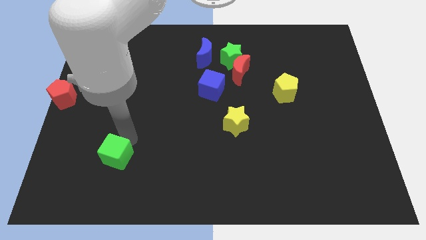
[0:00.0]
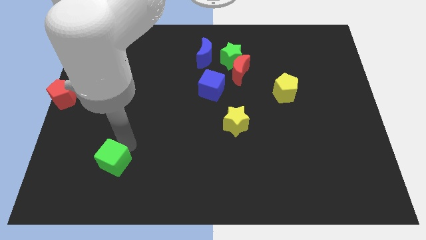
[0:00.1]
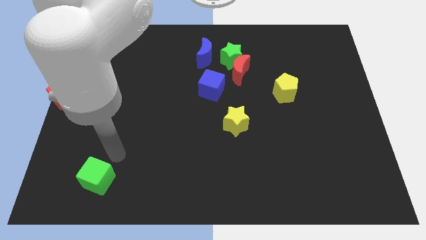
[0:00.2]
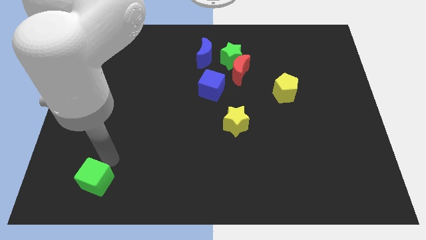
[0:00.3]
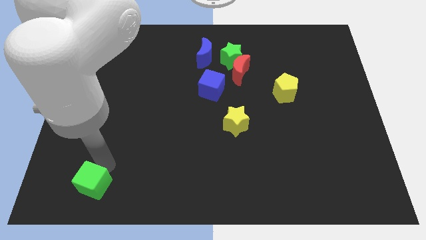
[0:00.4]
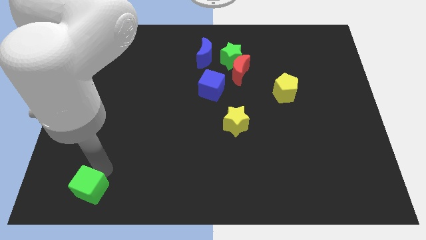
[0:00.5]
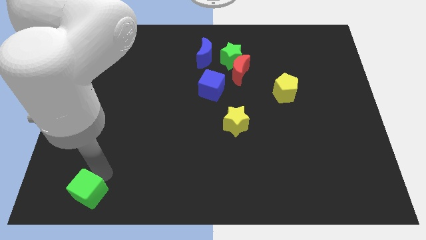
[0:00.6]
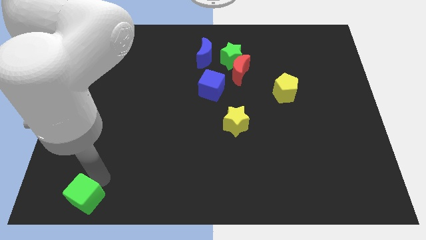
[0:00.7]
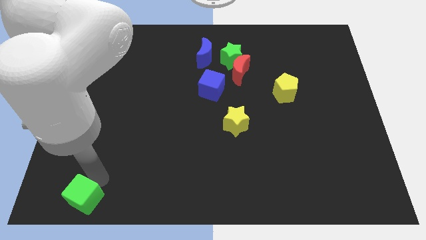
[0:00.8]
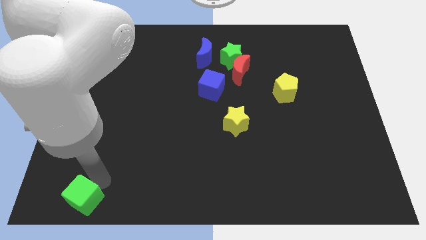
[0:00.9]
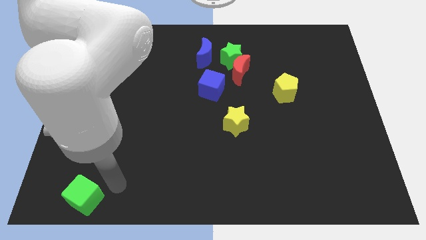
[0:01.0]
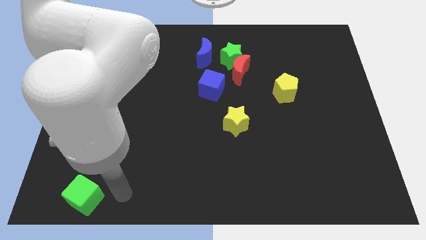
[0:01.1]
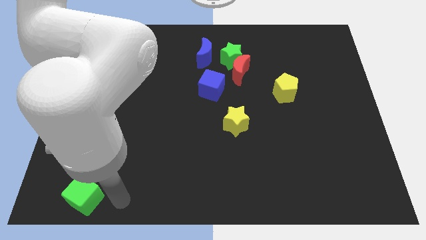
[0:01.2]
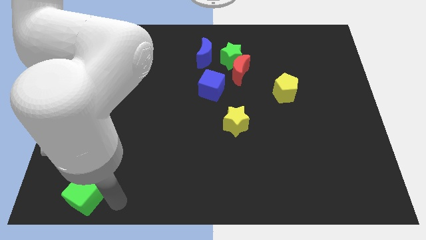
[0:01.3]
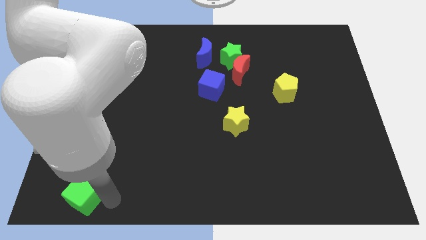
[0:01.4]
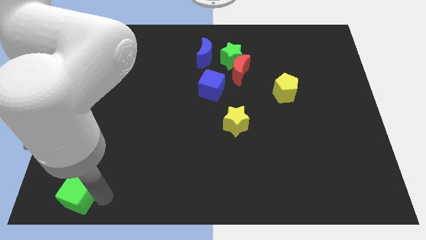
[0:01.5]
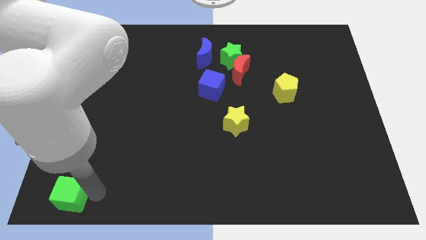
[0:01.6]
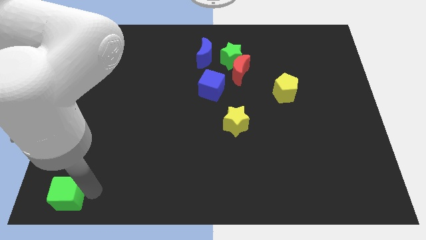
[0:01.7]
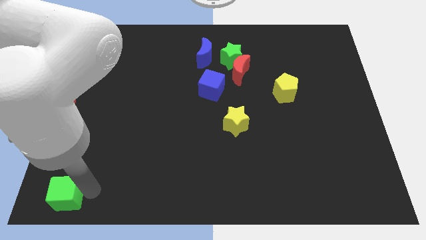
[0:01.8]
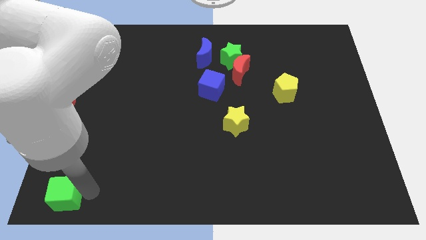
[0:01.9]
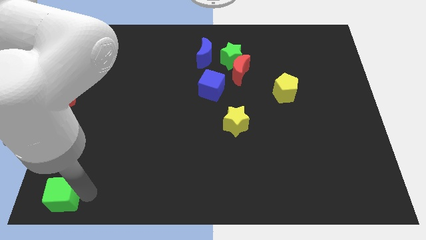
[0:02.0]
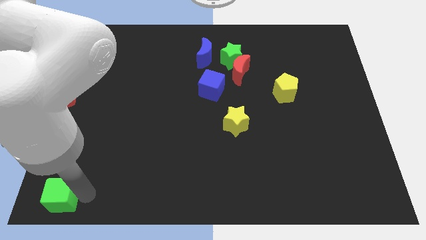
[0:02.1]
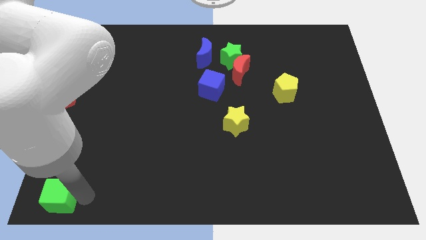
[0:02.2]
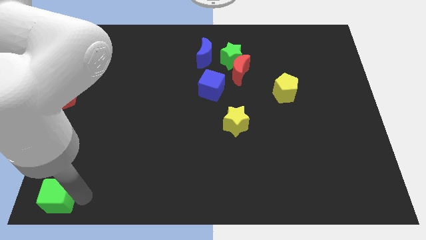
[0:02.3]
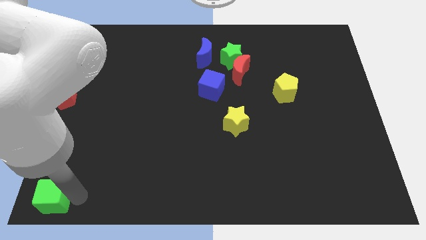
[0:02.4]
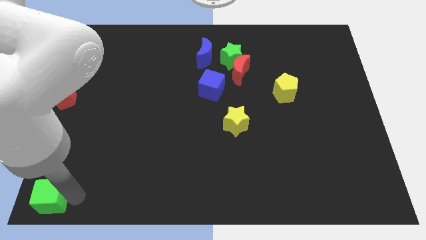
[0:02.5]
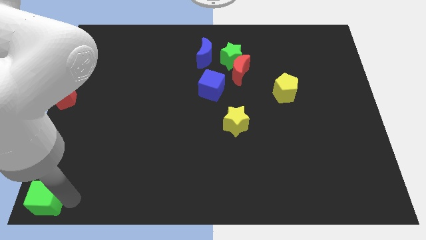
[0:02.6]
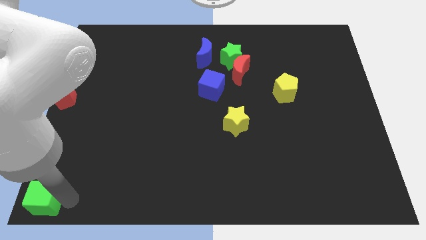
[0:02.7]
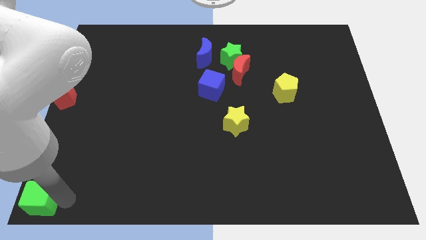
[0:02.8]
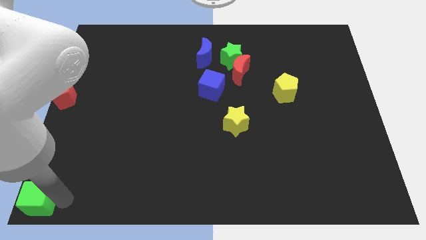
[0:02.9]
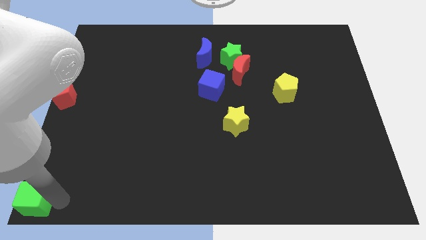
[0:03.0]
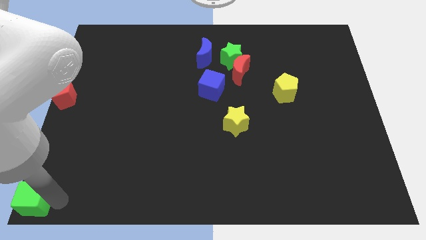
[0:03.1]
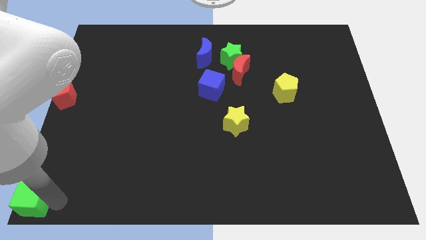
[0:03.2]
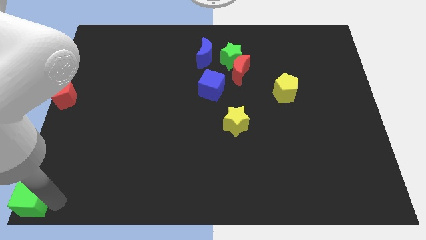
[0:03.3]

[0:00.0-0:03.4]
place the green cube at the bottom left corner of the board

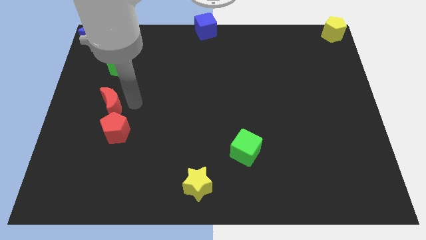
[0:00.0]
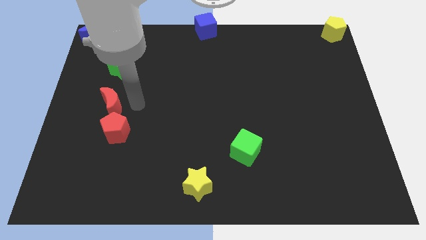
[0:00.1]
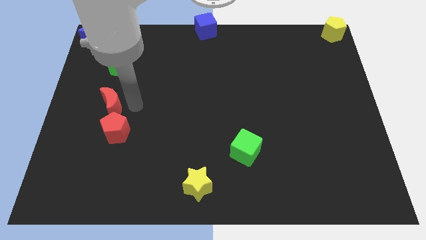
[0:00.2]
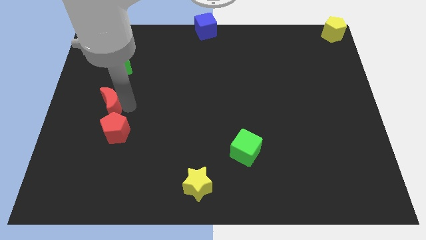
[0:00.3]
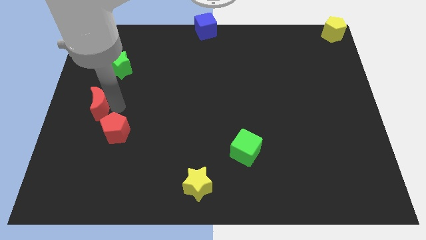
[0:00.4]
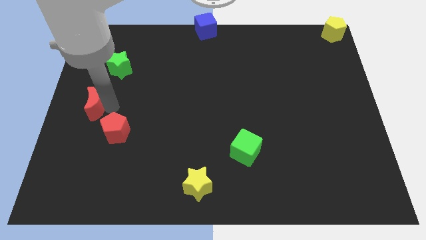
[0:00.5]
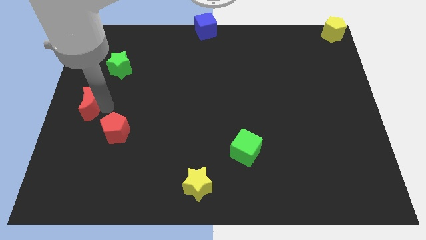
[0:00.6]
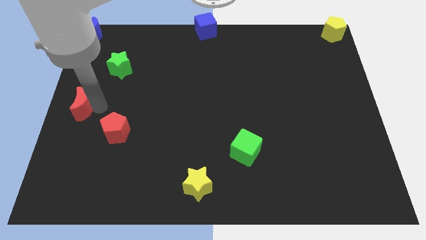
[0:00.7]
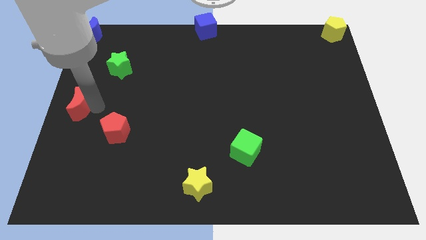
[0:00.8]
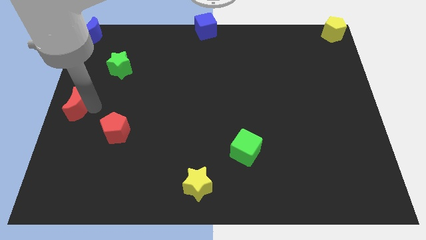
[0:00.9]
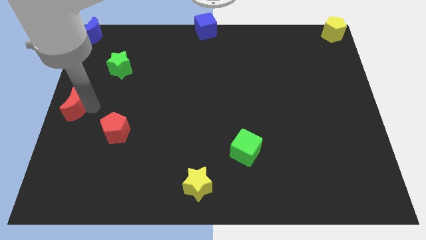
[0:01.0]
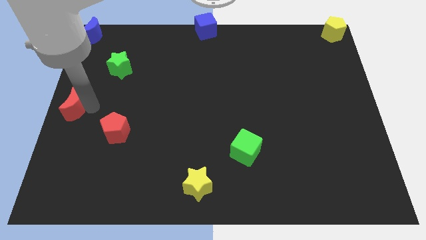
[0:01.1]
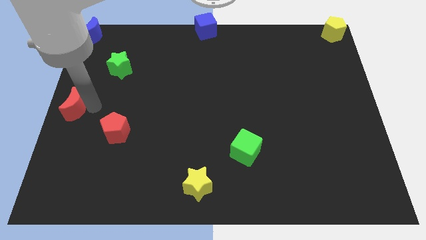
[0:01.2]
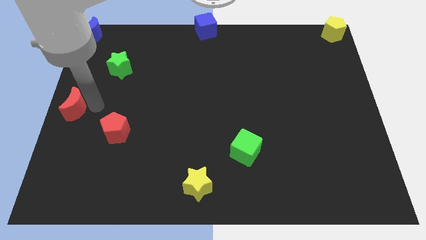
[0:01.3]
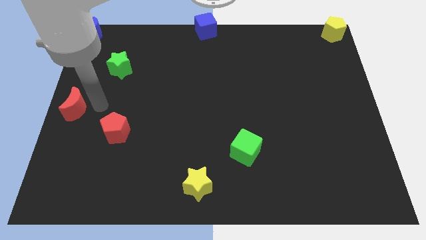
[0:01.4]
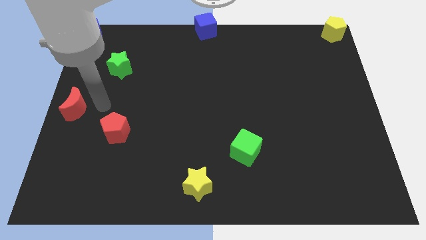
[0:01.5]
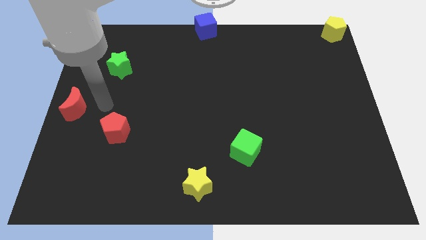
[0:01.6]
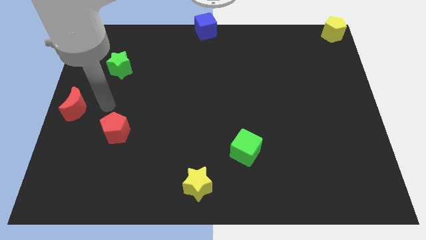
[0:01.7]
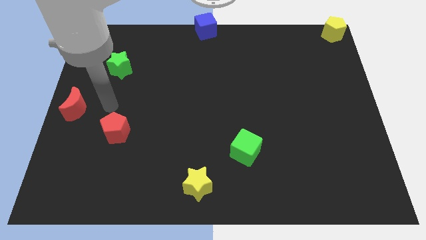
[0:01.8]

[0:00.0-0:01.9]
place the red crescent to the left center of the board

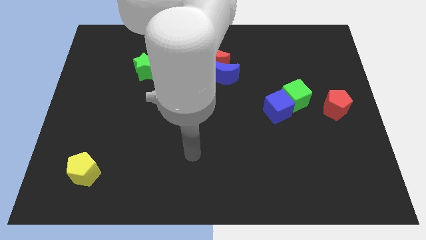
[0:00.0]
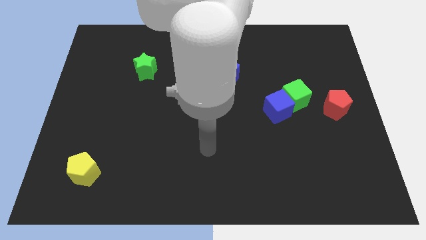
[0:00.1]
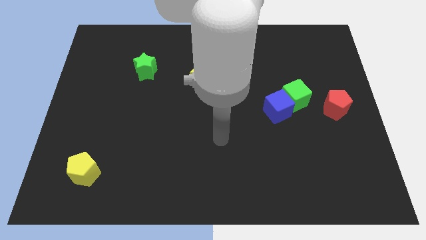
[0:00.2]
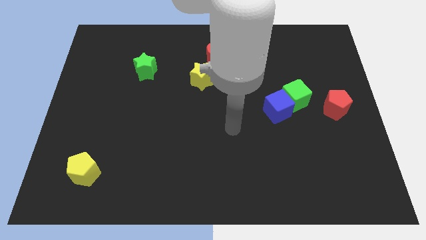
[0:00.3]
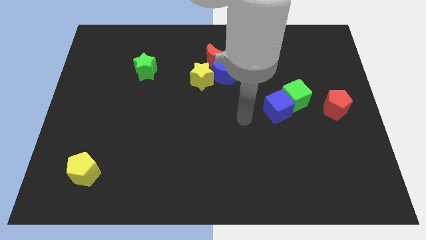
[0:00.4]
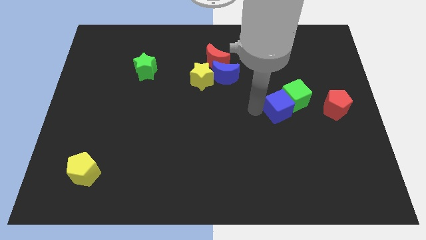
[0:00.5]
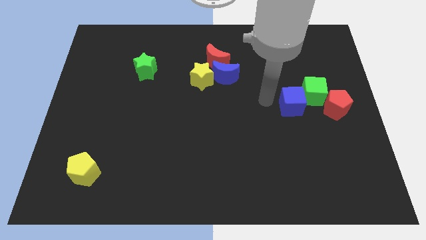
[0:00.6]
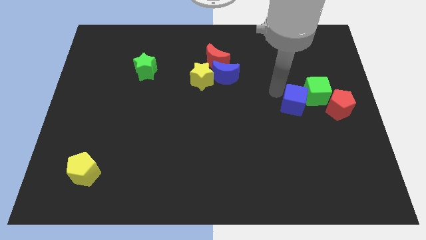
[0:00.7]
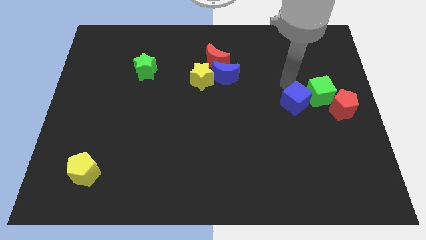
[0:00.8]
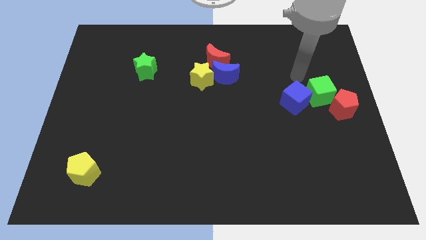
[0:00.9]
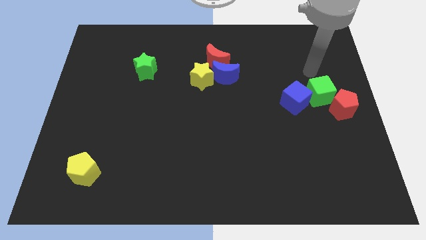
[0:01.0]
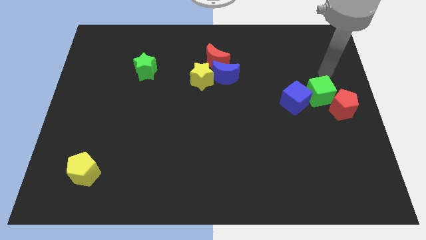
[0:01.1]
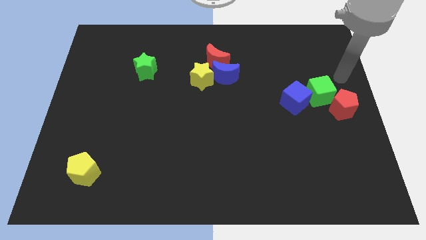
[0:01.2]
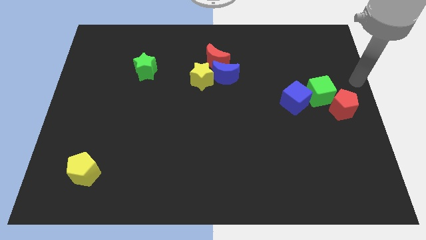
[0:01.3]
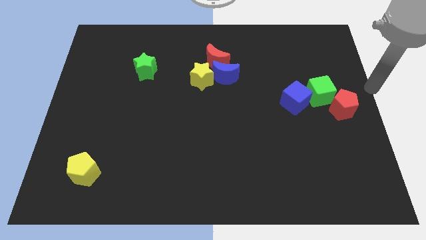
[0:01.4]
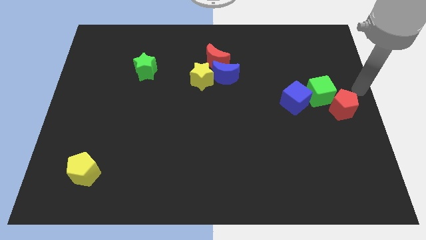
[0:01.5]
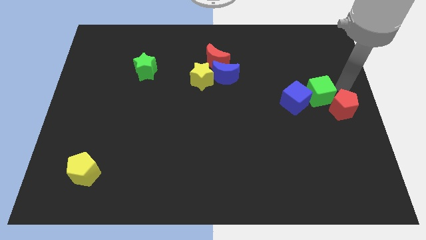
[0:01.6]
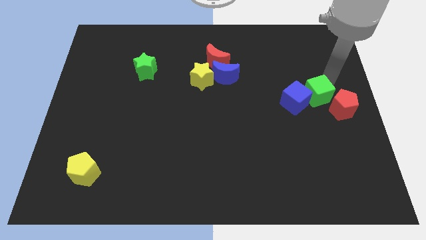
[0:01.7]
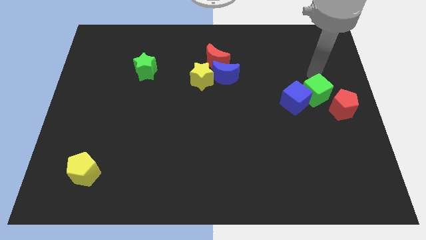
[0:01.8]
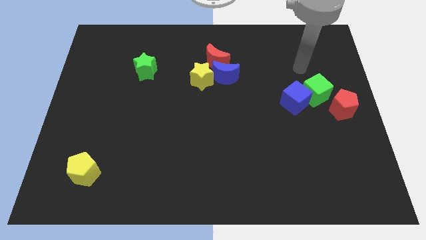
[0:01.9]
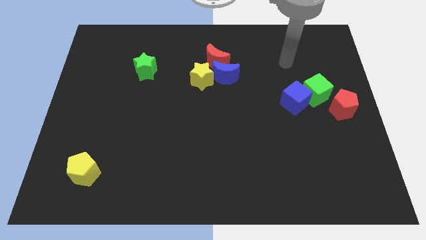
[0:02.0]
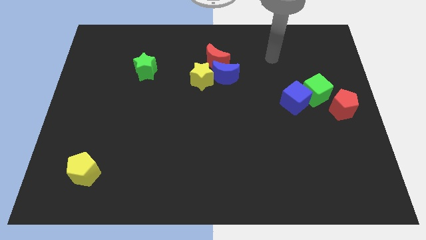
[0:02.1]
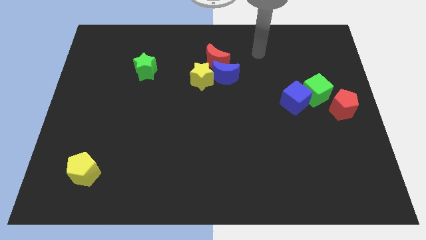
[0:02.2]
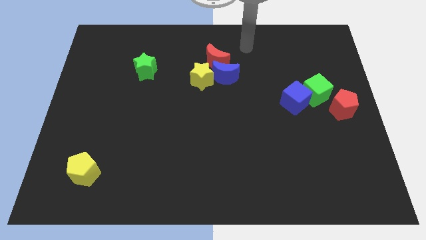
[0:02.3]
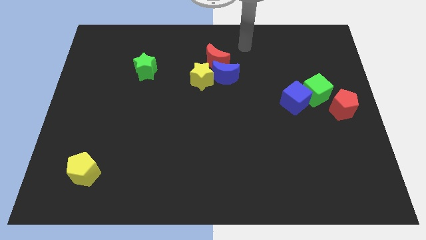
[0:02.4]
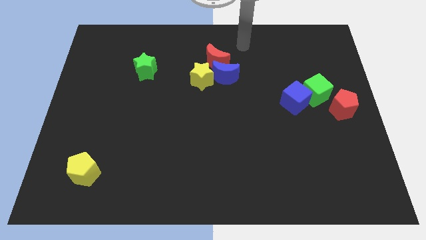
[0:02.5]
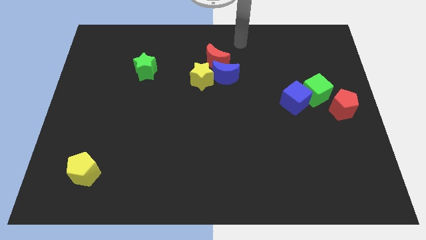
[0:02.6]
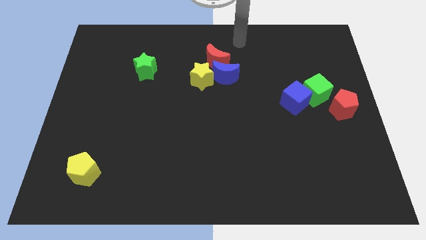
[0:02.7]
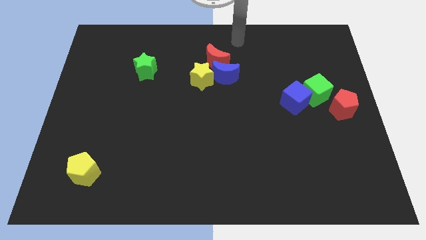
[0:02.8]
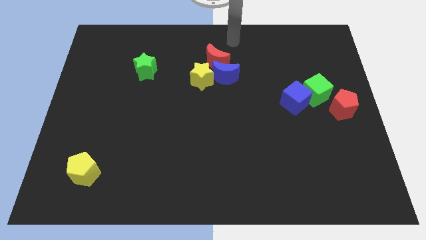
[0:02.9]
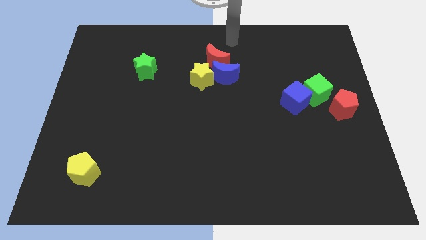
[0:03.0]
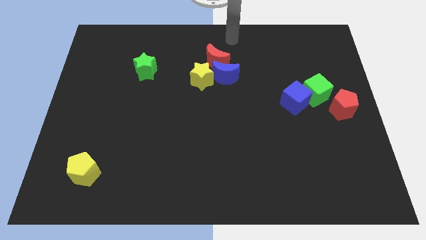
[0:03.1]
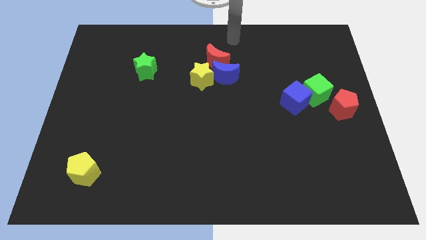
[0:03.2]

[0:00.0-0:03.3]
move the red pentagonblue and the green cube towards the center right

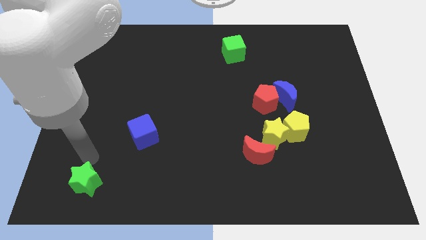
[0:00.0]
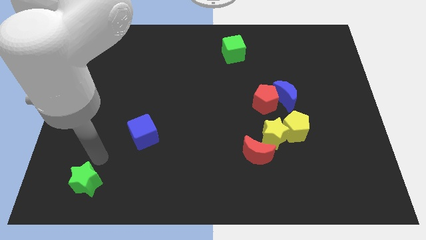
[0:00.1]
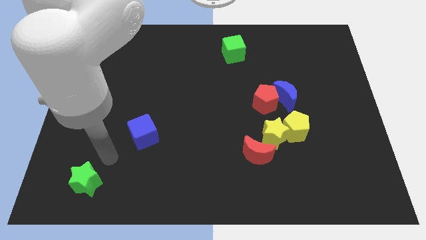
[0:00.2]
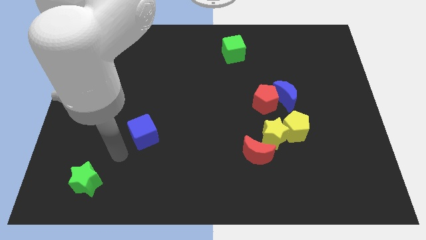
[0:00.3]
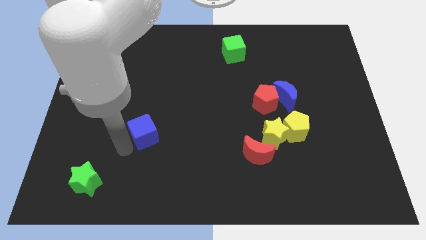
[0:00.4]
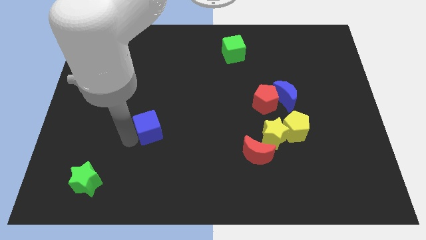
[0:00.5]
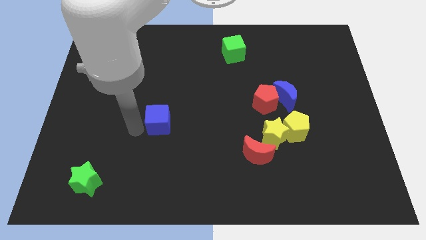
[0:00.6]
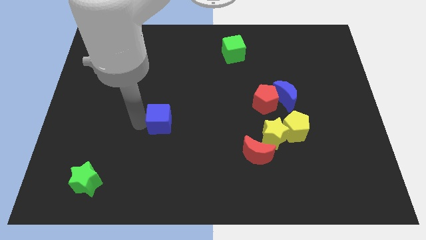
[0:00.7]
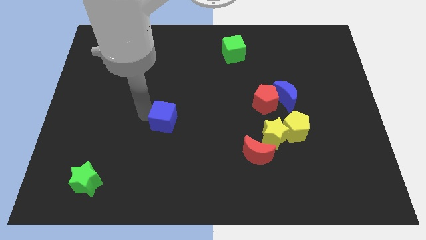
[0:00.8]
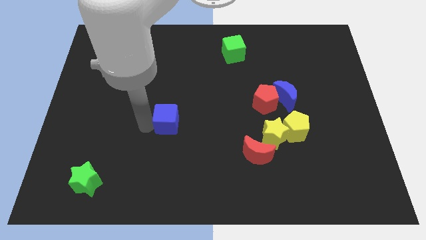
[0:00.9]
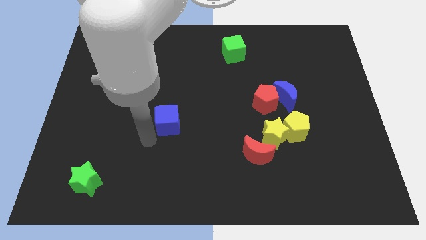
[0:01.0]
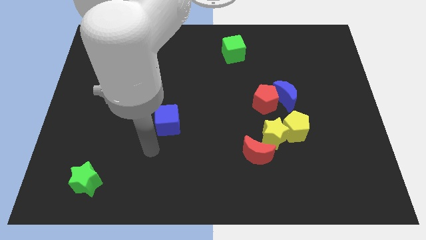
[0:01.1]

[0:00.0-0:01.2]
push the blue cube slightly to the right
